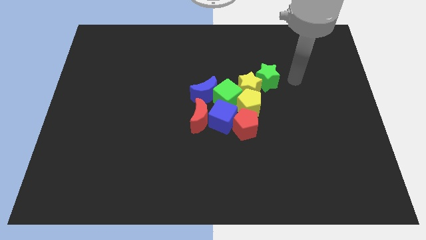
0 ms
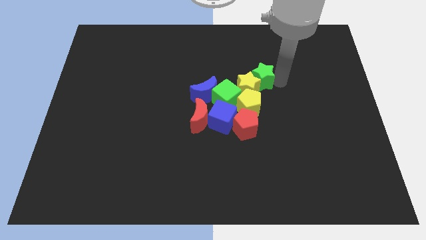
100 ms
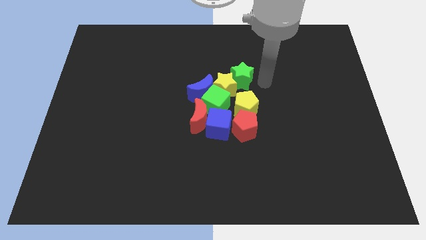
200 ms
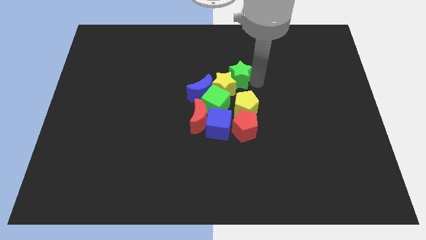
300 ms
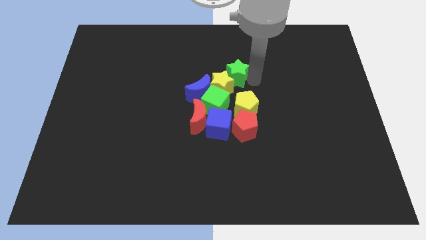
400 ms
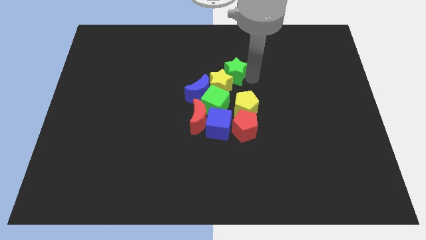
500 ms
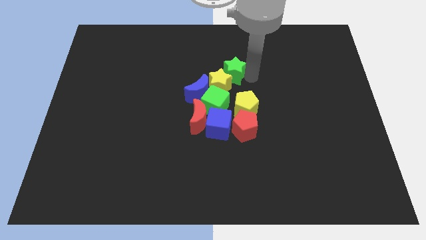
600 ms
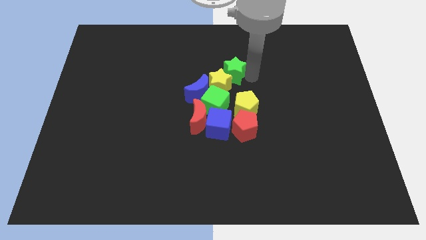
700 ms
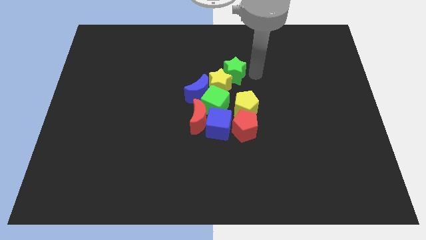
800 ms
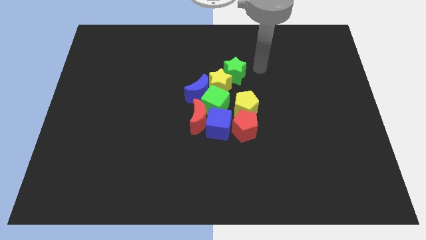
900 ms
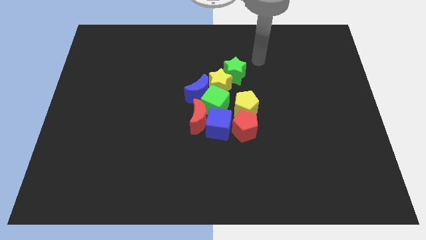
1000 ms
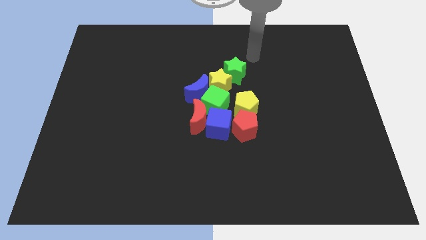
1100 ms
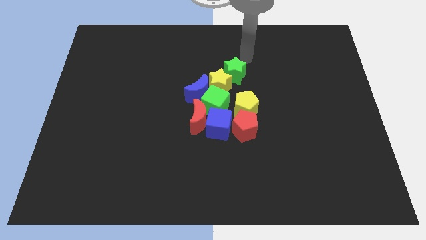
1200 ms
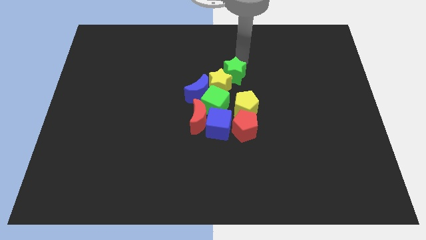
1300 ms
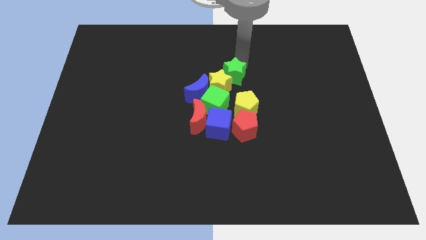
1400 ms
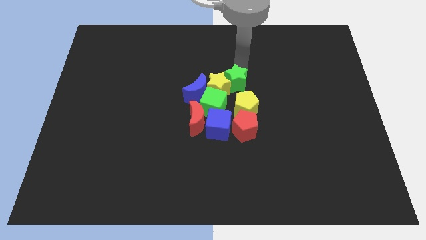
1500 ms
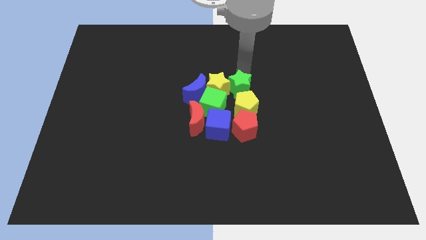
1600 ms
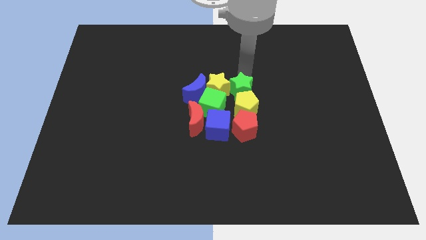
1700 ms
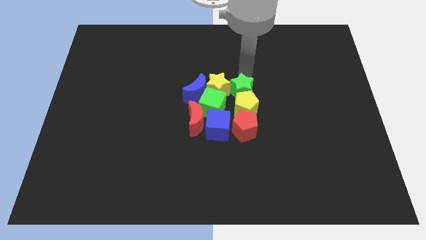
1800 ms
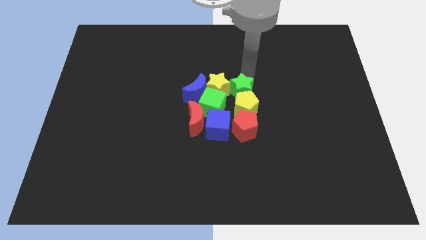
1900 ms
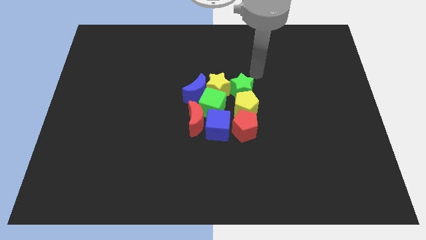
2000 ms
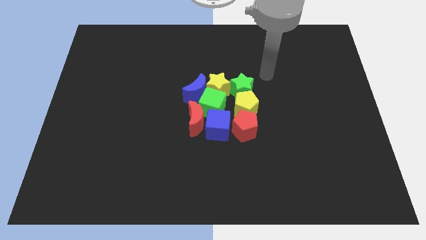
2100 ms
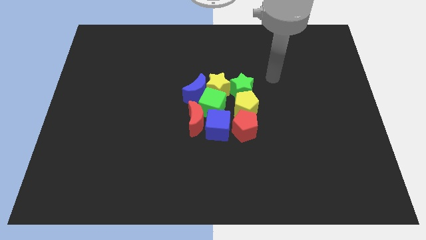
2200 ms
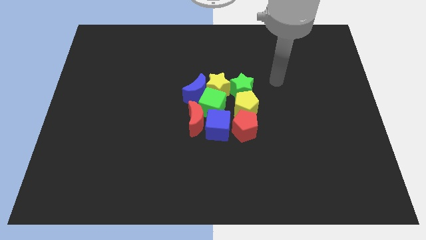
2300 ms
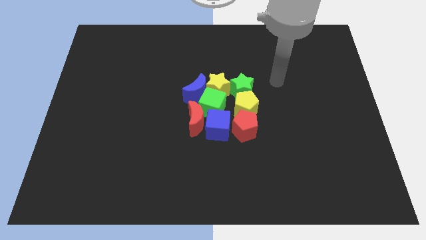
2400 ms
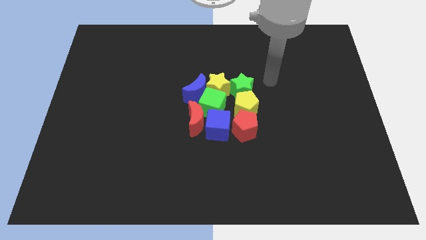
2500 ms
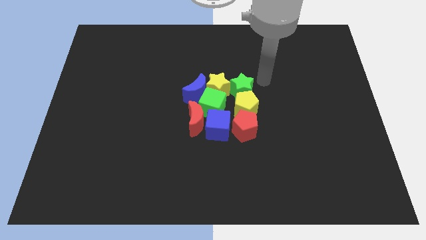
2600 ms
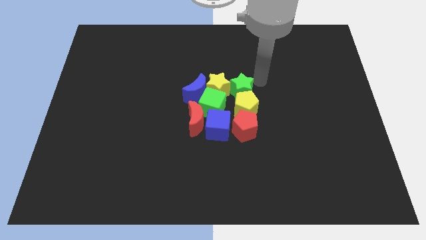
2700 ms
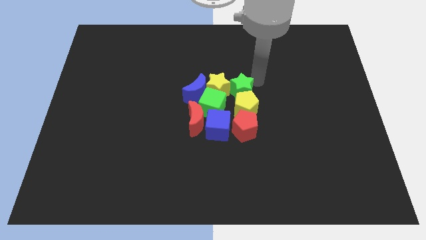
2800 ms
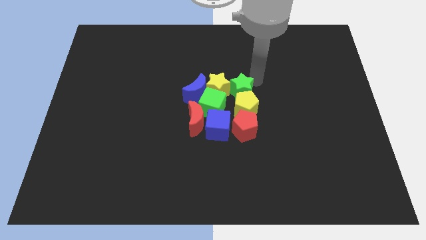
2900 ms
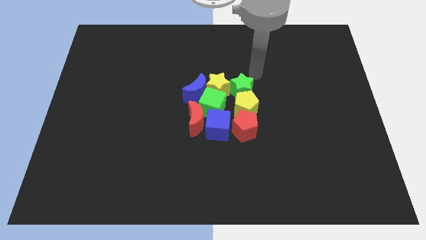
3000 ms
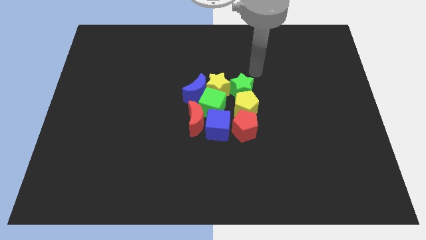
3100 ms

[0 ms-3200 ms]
add the green star to the group of all the blocks

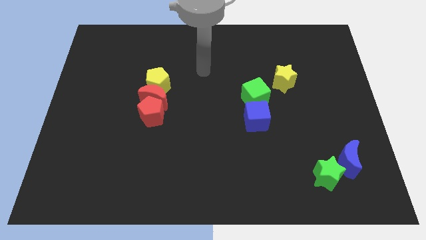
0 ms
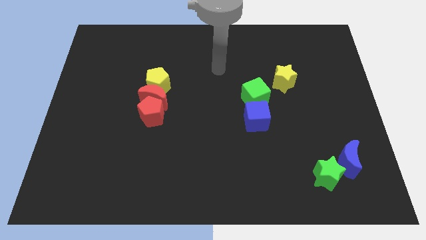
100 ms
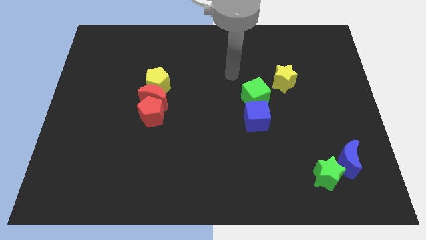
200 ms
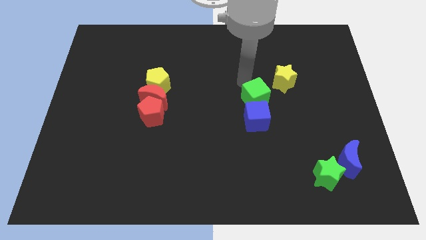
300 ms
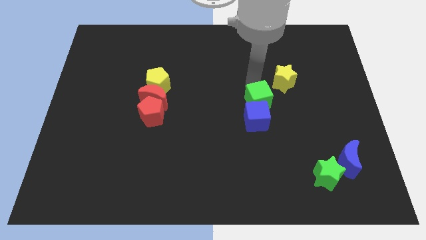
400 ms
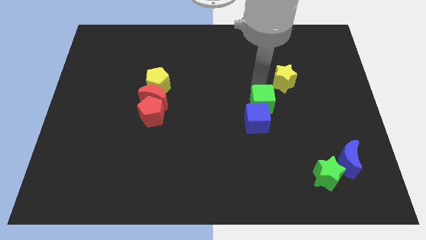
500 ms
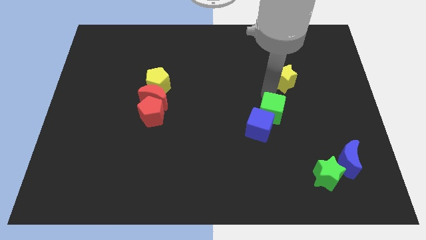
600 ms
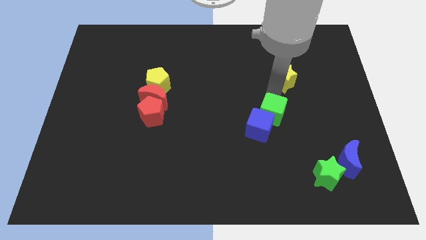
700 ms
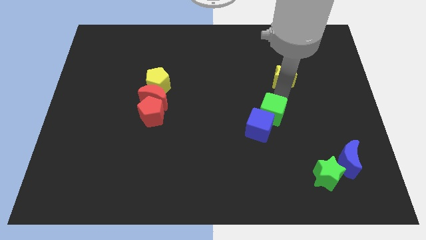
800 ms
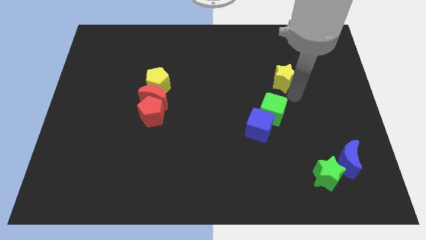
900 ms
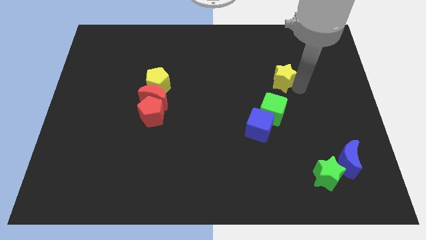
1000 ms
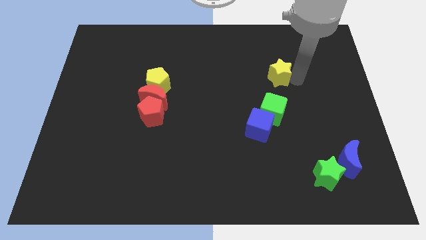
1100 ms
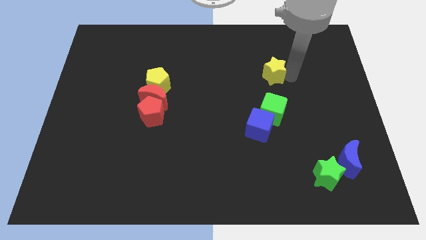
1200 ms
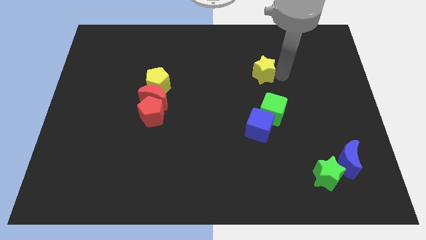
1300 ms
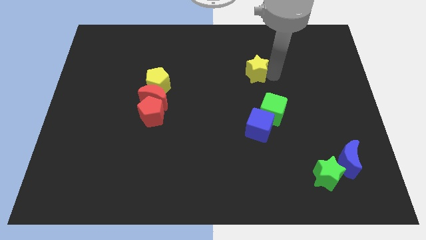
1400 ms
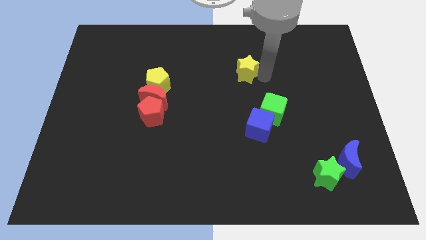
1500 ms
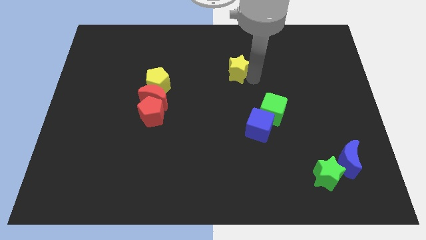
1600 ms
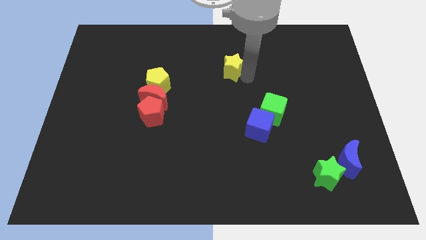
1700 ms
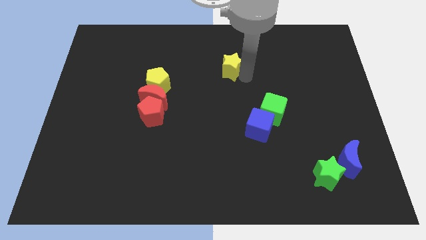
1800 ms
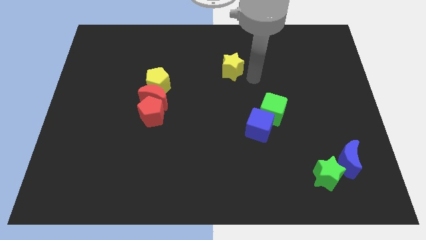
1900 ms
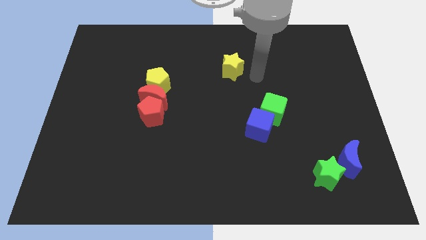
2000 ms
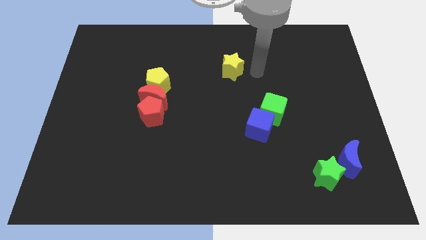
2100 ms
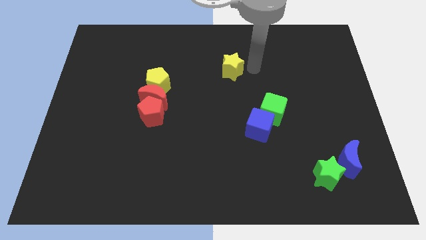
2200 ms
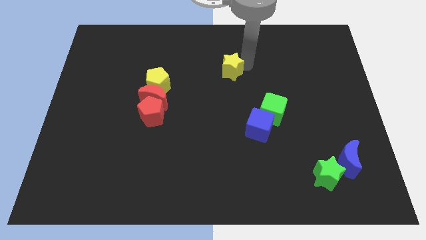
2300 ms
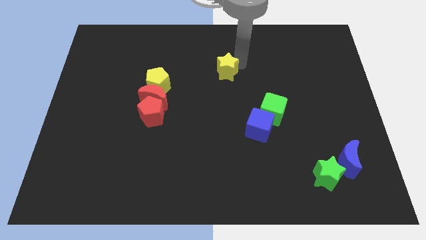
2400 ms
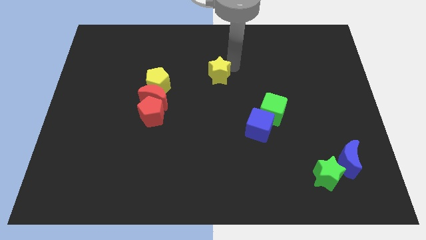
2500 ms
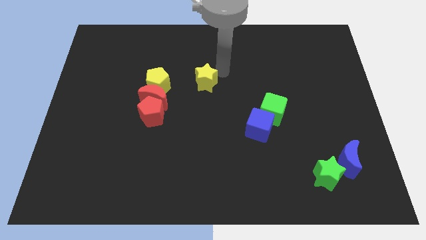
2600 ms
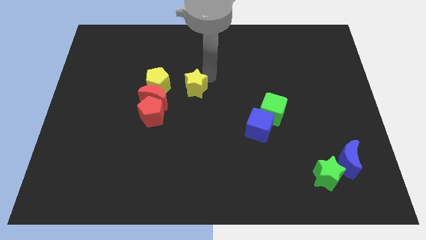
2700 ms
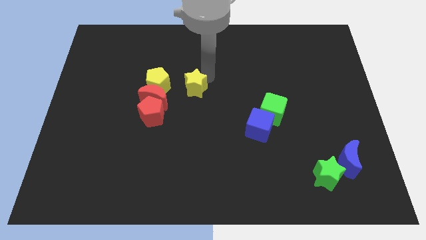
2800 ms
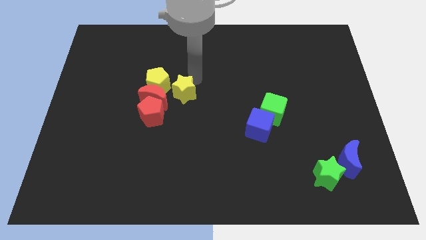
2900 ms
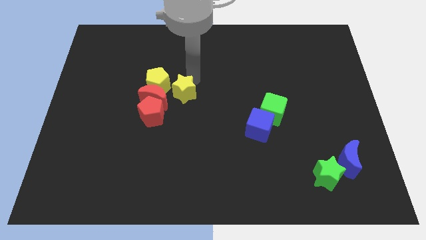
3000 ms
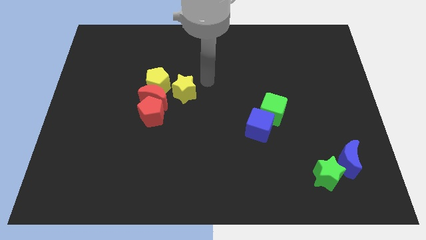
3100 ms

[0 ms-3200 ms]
move yellow star right to the yellow pentagon

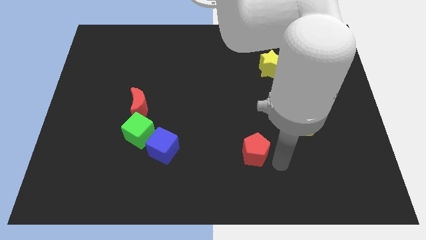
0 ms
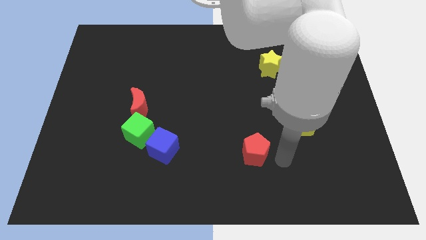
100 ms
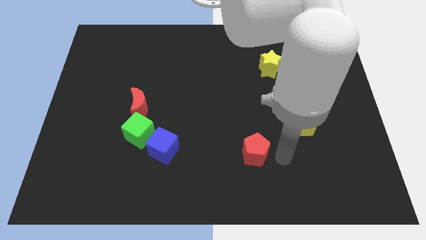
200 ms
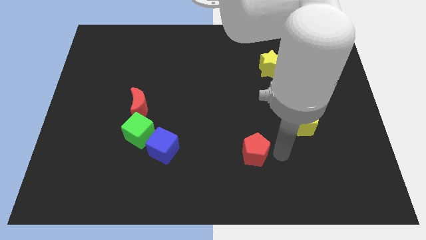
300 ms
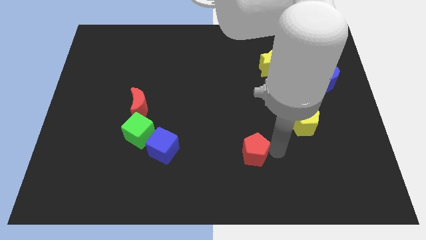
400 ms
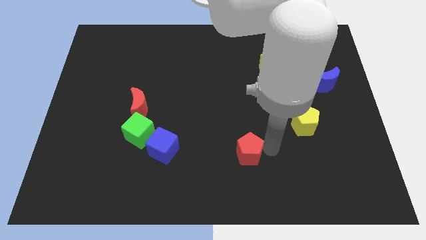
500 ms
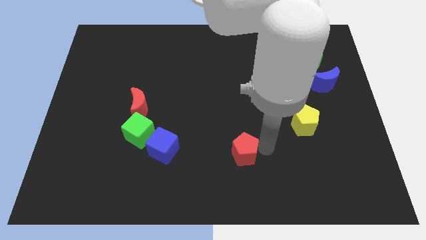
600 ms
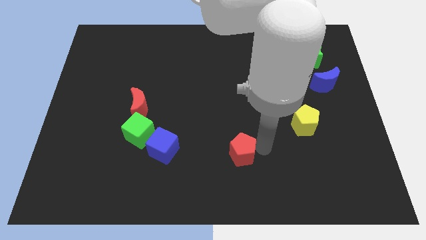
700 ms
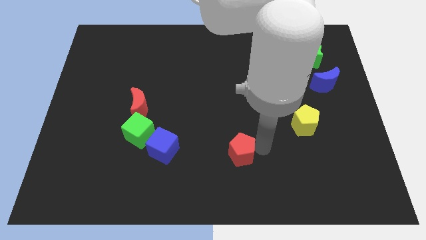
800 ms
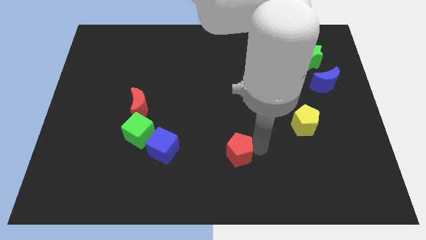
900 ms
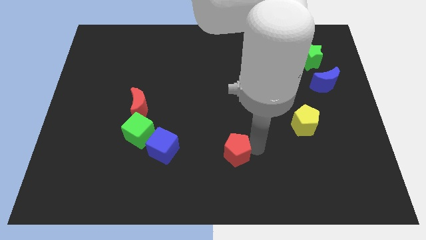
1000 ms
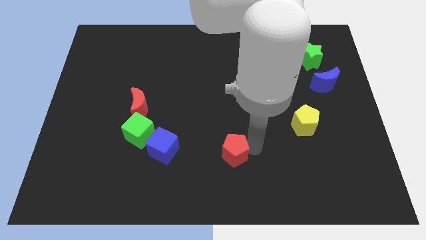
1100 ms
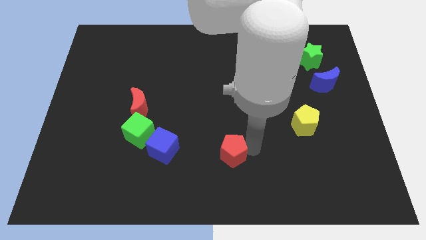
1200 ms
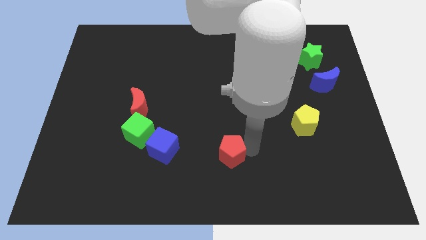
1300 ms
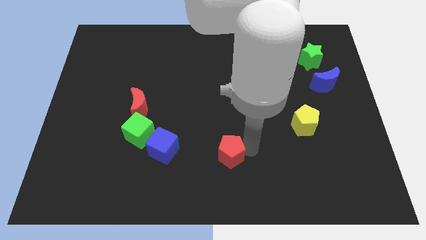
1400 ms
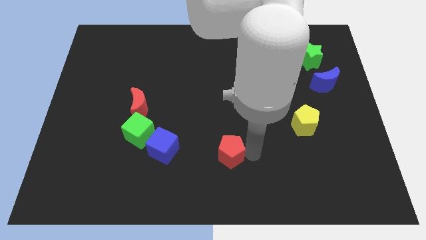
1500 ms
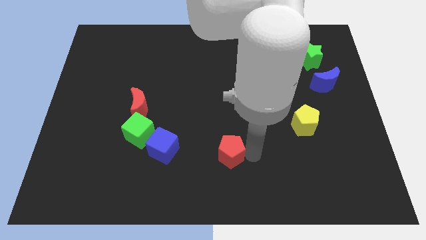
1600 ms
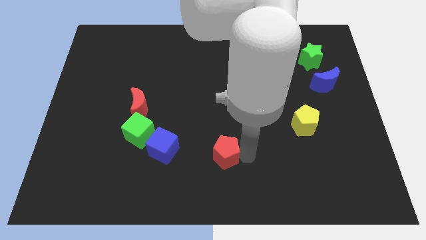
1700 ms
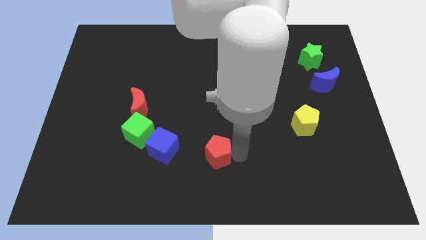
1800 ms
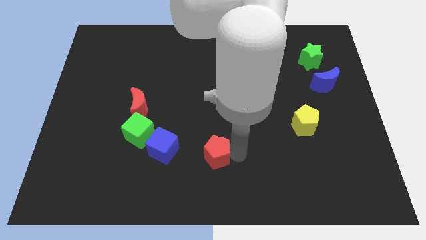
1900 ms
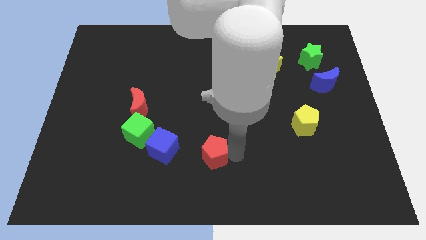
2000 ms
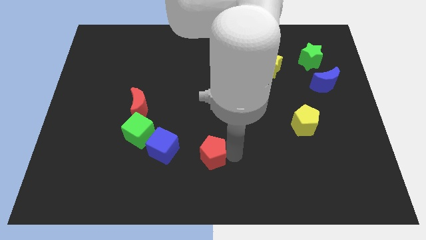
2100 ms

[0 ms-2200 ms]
push the red pentagon towards the blue cube

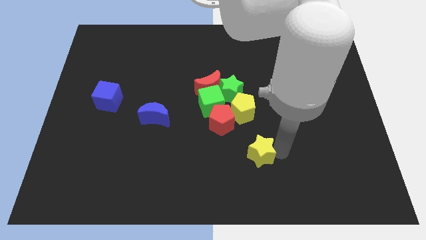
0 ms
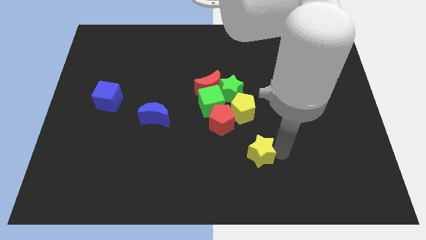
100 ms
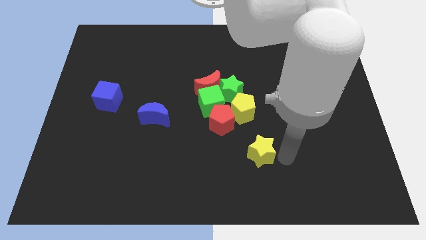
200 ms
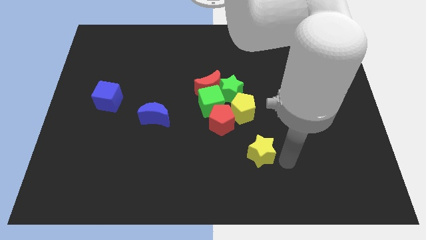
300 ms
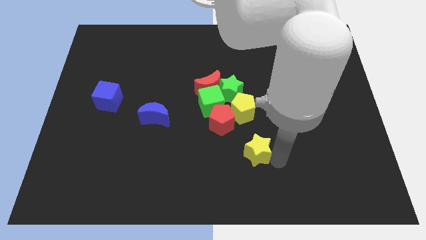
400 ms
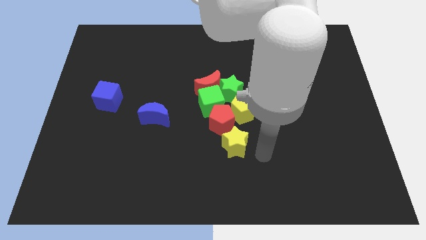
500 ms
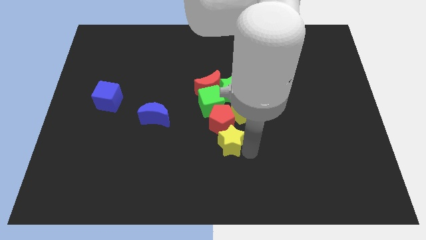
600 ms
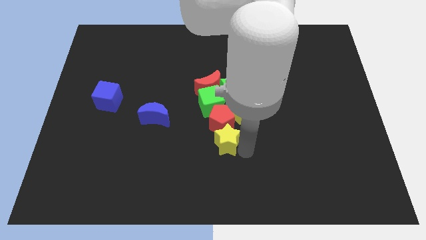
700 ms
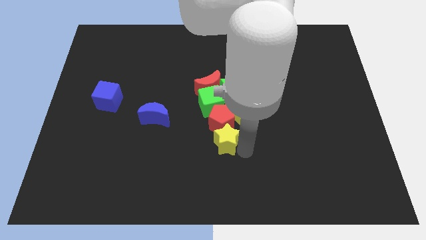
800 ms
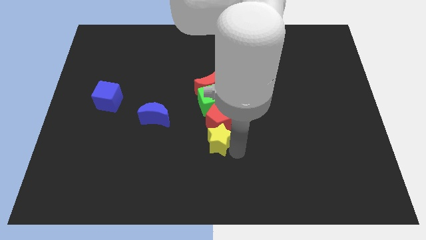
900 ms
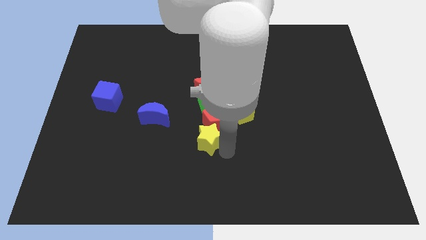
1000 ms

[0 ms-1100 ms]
move yellow star below red pentagon
